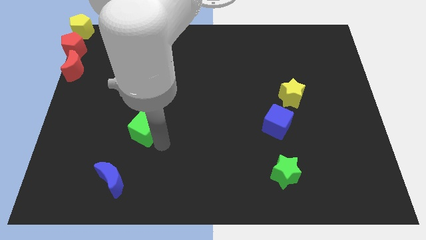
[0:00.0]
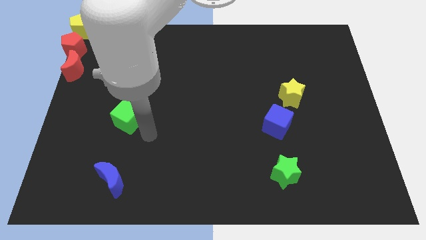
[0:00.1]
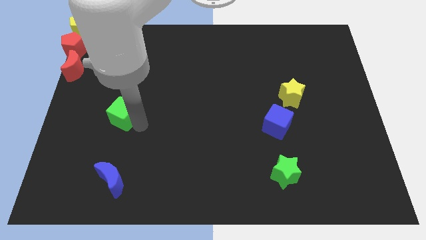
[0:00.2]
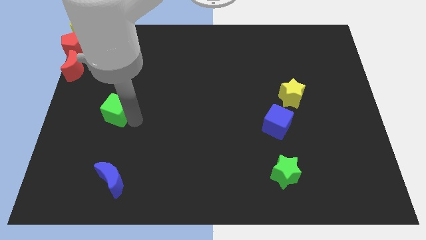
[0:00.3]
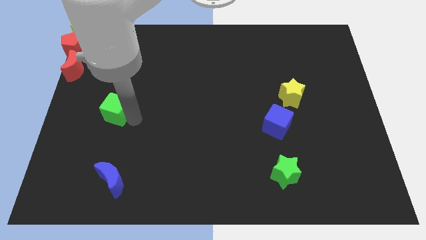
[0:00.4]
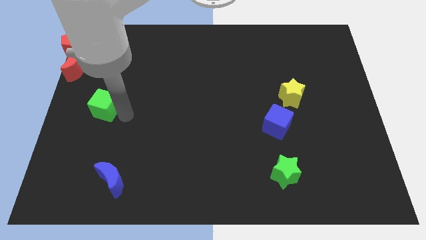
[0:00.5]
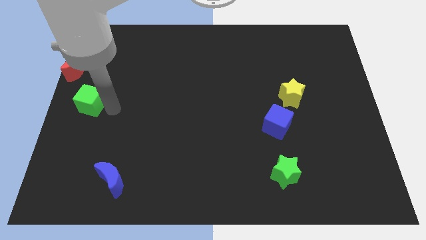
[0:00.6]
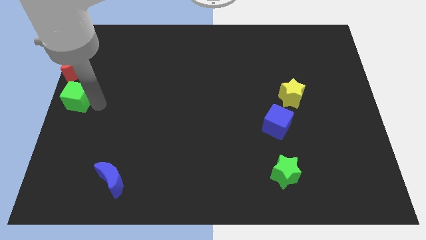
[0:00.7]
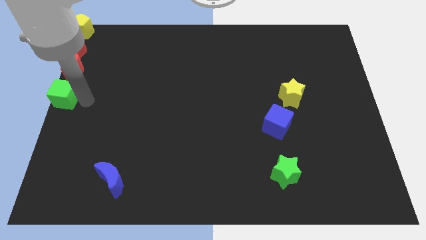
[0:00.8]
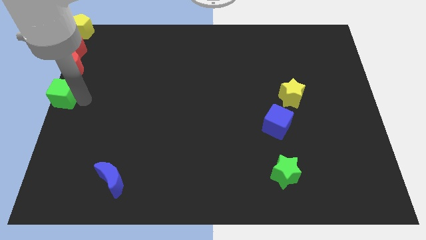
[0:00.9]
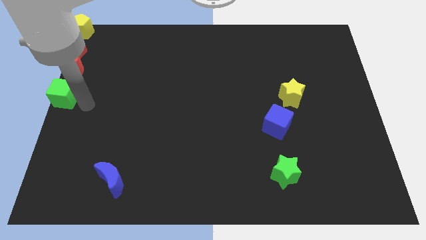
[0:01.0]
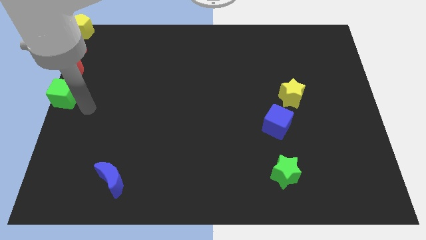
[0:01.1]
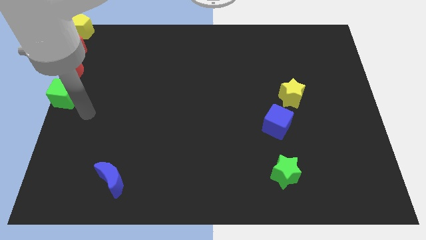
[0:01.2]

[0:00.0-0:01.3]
push the green cube to the bottom of red crescent

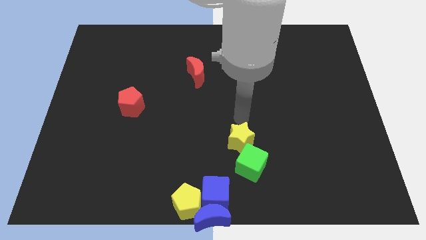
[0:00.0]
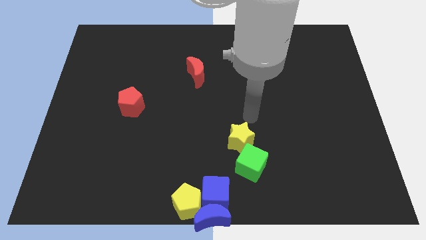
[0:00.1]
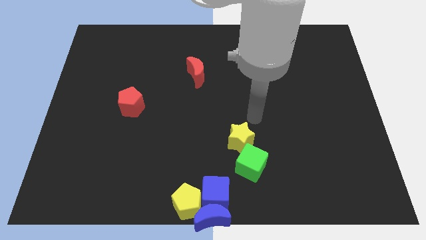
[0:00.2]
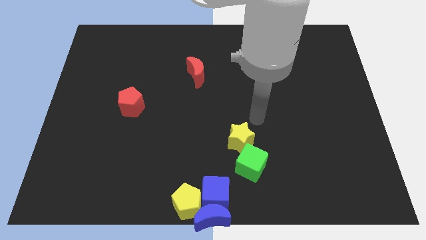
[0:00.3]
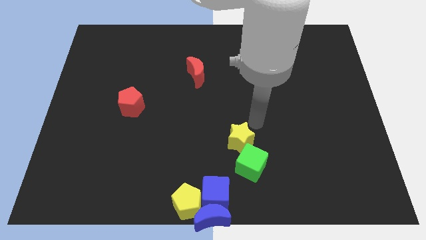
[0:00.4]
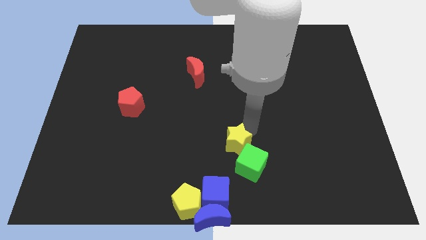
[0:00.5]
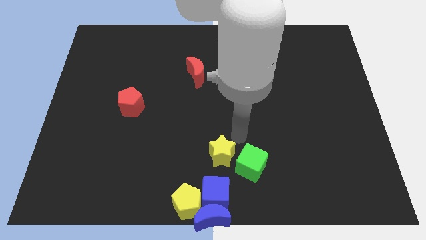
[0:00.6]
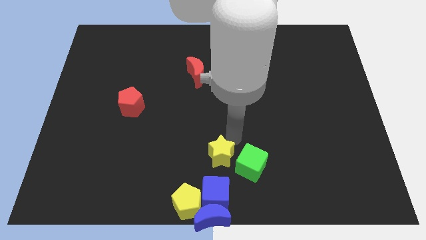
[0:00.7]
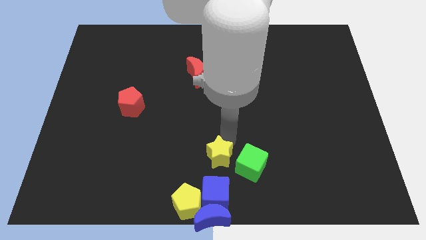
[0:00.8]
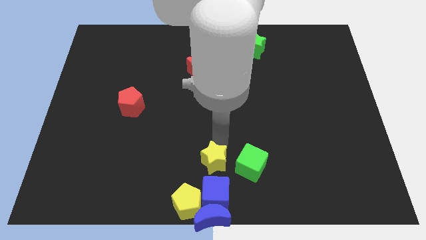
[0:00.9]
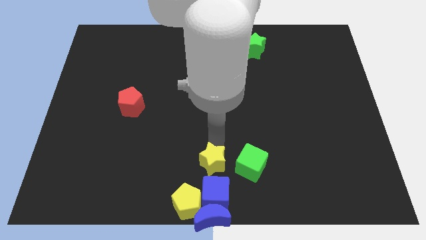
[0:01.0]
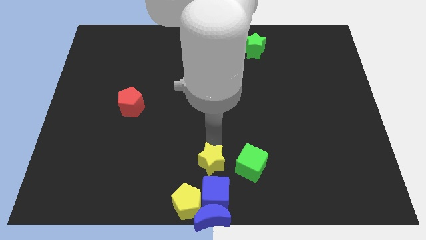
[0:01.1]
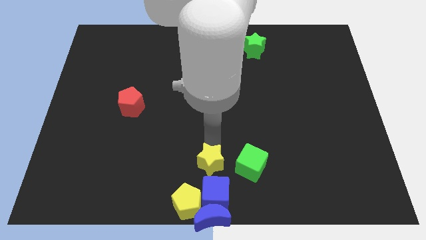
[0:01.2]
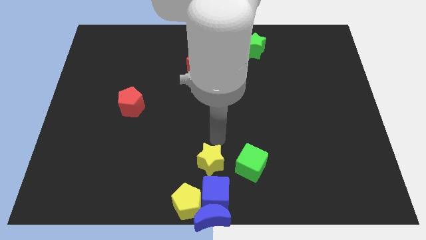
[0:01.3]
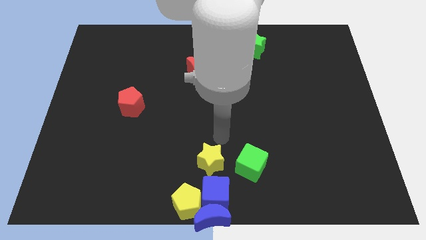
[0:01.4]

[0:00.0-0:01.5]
push the yellow star to the top of the blue cube

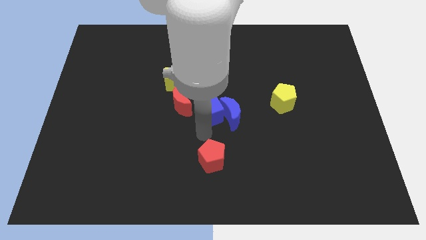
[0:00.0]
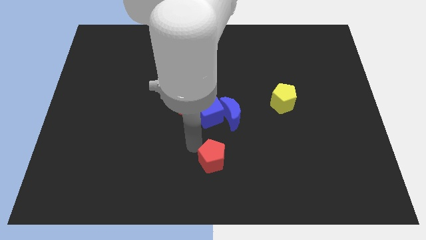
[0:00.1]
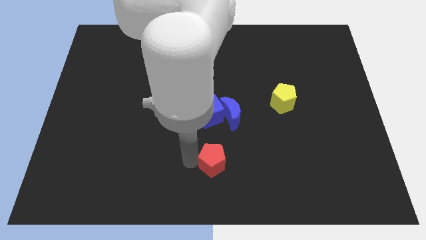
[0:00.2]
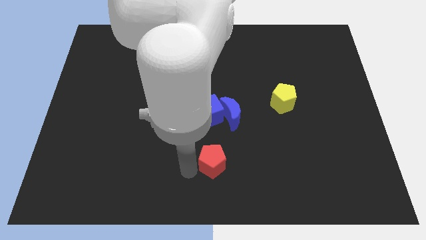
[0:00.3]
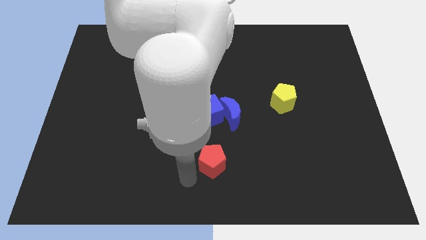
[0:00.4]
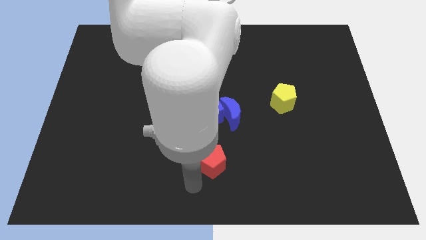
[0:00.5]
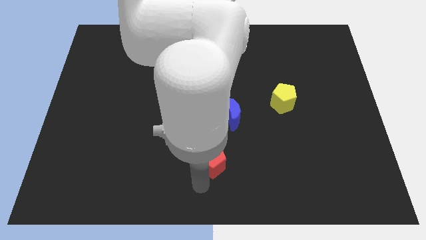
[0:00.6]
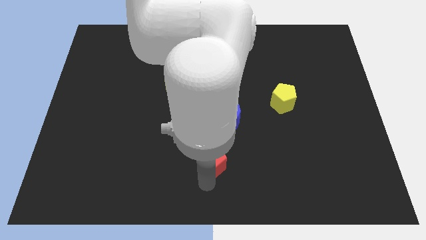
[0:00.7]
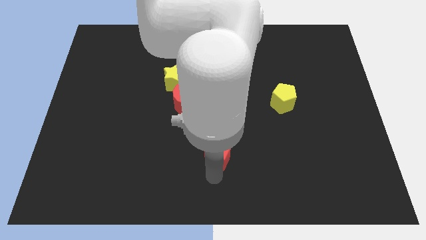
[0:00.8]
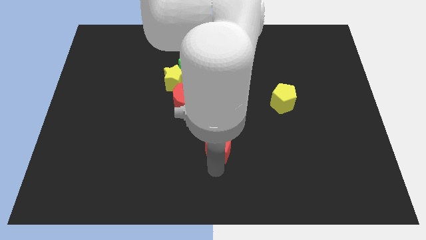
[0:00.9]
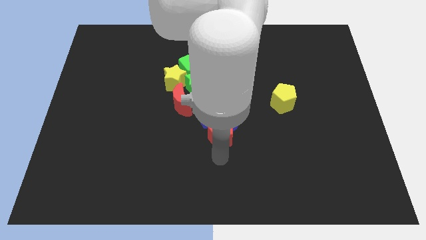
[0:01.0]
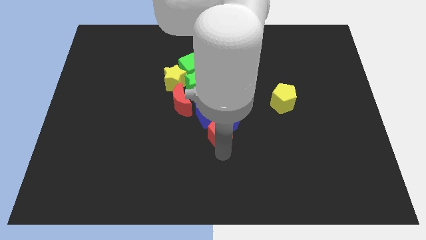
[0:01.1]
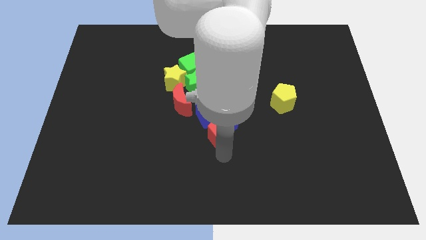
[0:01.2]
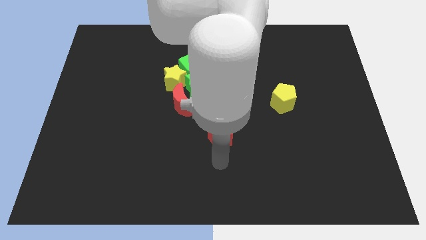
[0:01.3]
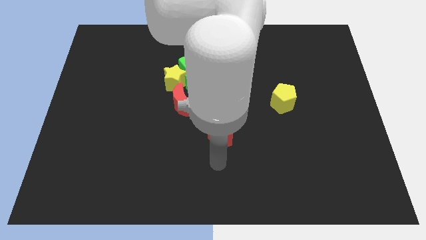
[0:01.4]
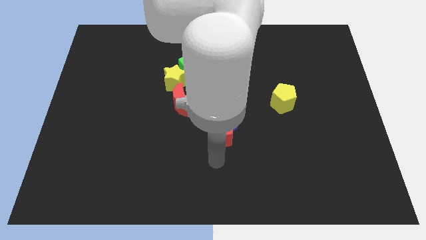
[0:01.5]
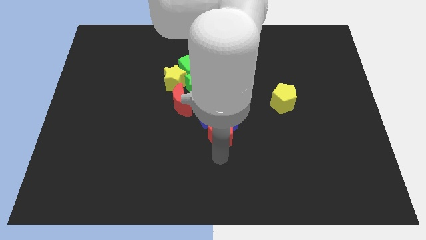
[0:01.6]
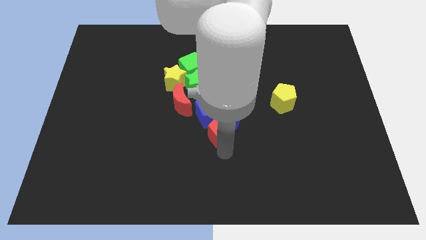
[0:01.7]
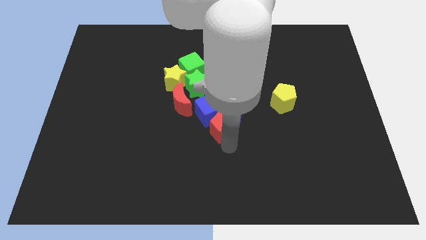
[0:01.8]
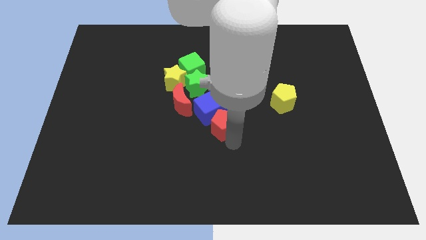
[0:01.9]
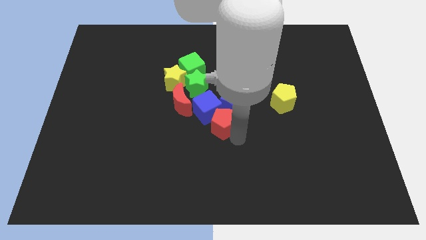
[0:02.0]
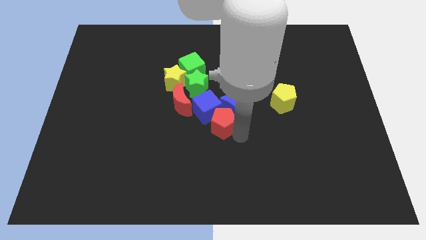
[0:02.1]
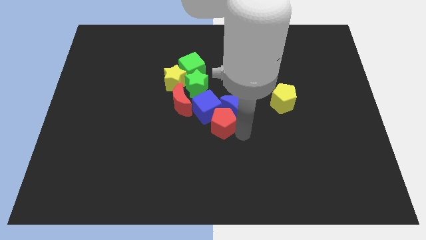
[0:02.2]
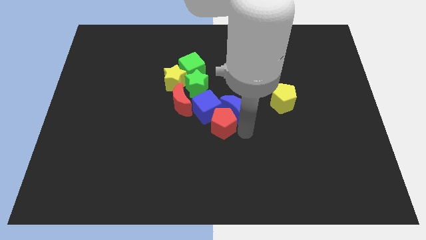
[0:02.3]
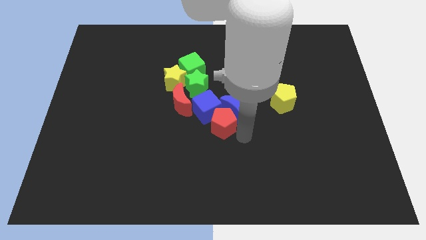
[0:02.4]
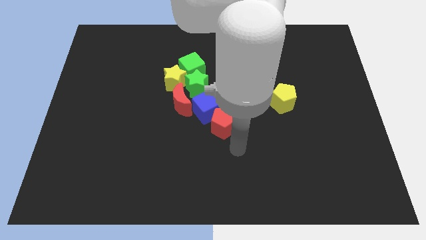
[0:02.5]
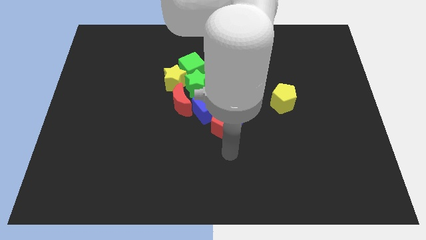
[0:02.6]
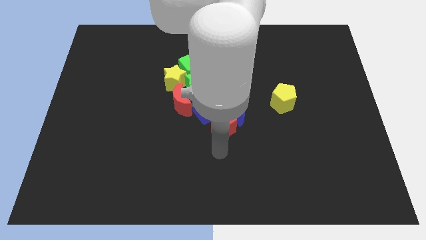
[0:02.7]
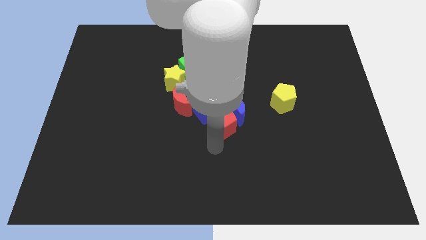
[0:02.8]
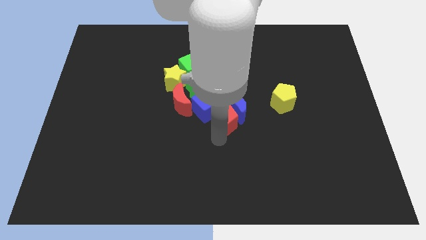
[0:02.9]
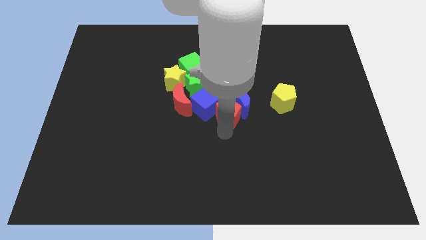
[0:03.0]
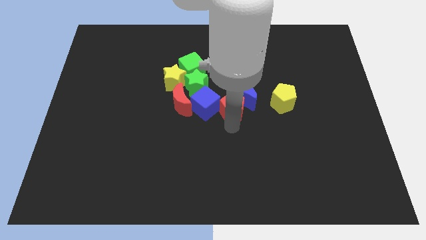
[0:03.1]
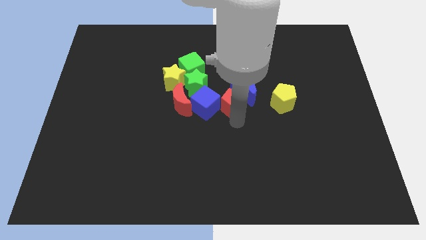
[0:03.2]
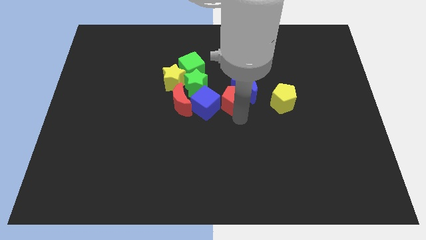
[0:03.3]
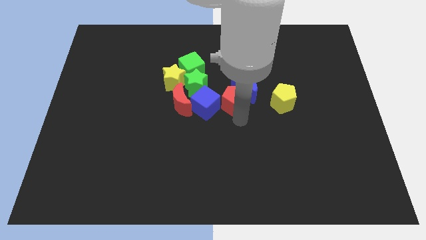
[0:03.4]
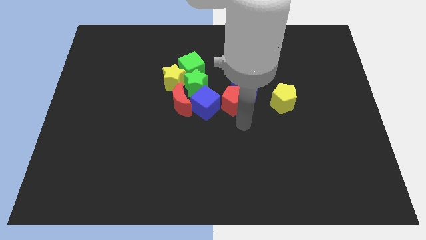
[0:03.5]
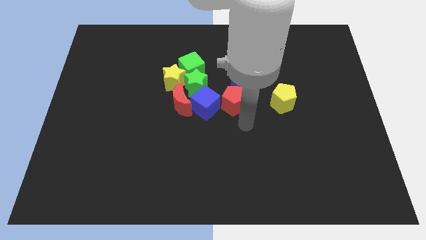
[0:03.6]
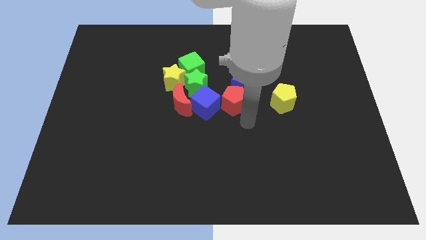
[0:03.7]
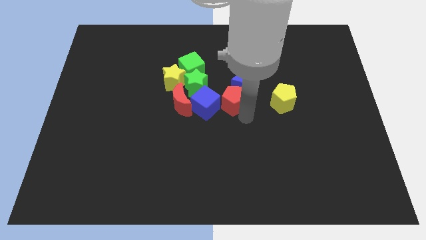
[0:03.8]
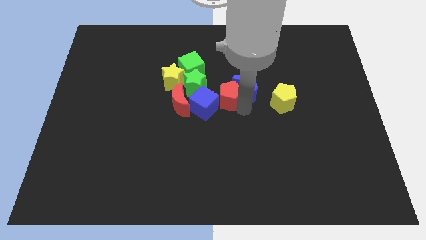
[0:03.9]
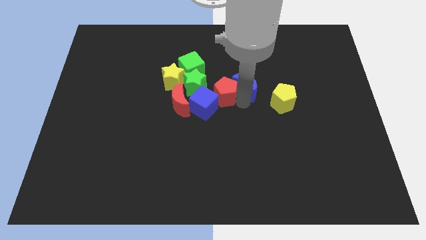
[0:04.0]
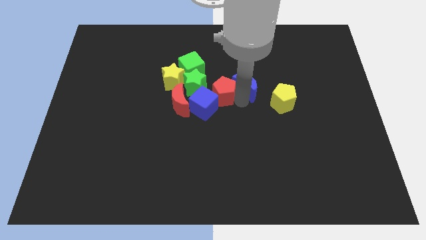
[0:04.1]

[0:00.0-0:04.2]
place red pentagon in between blue blocks

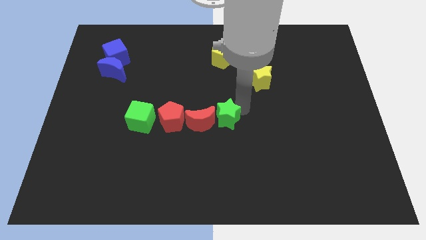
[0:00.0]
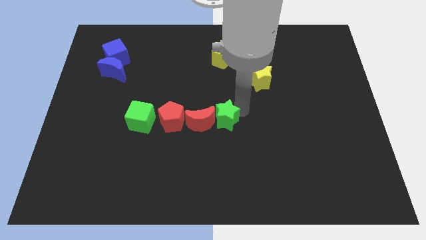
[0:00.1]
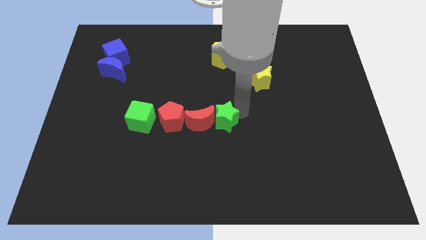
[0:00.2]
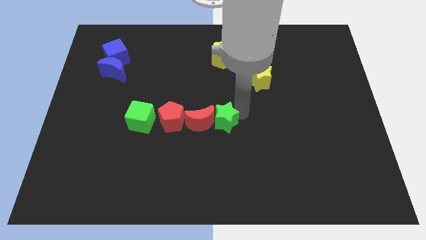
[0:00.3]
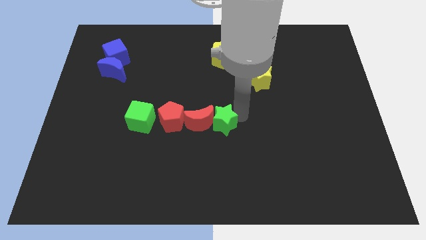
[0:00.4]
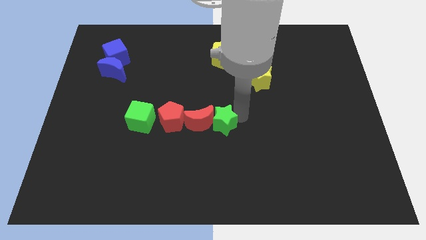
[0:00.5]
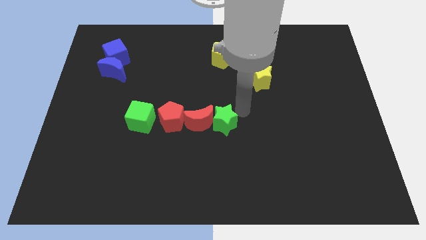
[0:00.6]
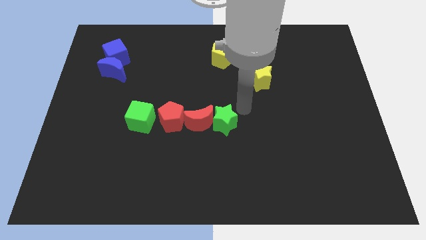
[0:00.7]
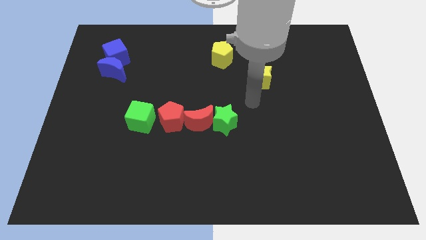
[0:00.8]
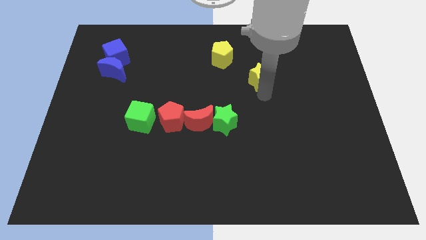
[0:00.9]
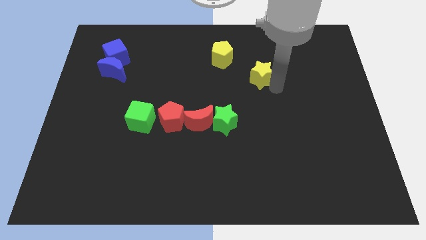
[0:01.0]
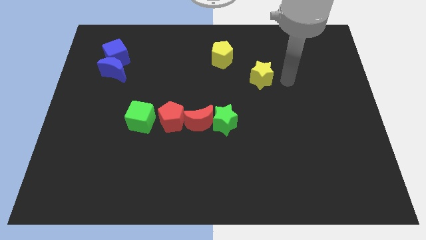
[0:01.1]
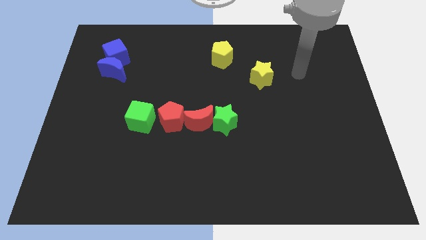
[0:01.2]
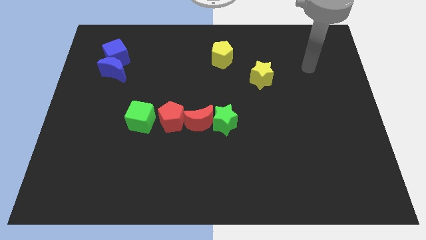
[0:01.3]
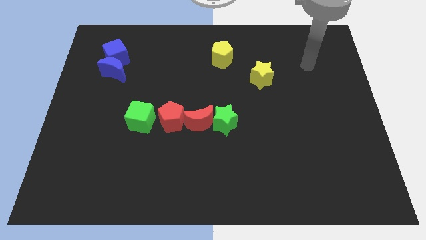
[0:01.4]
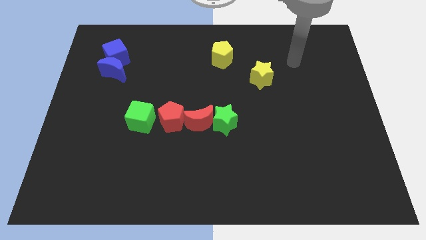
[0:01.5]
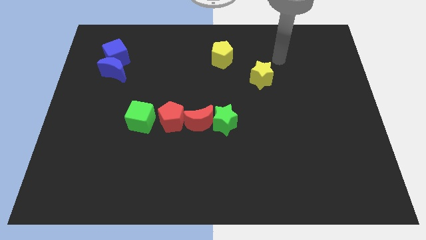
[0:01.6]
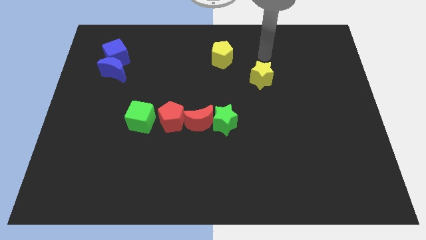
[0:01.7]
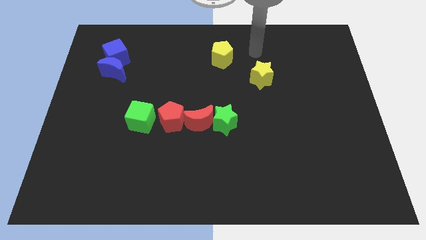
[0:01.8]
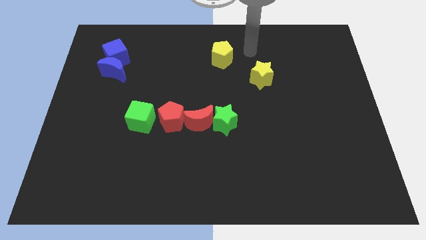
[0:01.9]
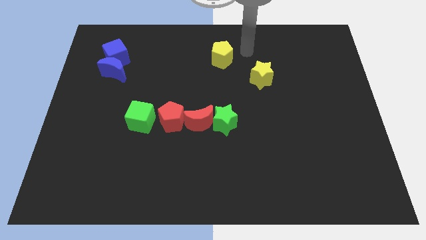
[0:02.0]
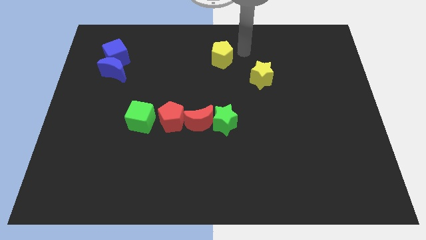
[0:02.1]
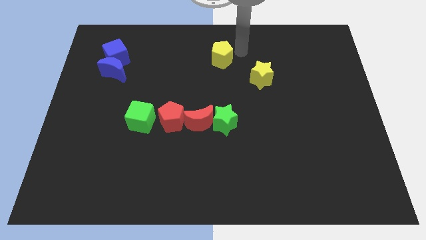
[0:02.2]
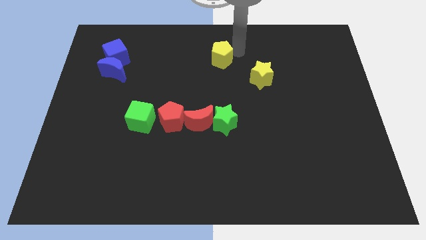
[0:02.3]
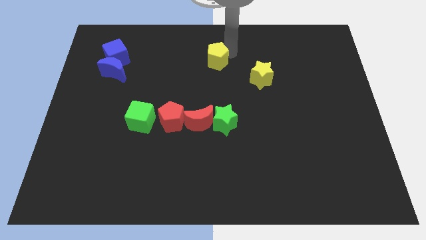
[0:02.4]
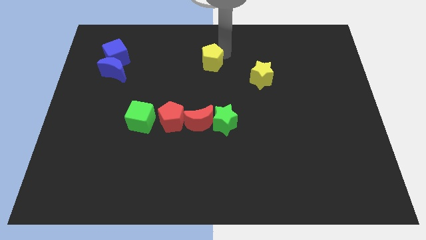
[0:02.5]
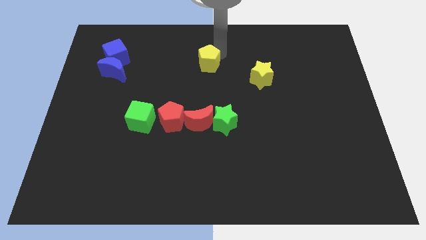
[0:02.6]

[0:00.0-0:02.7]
move your arm to the top of the yellow pentagon
